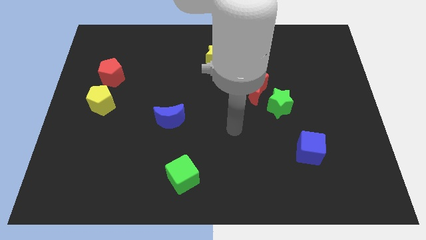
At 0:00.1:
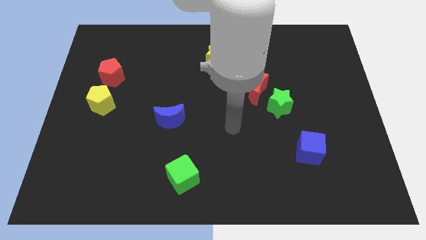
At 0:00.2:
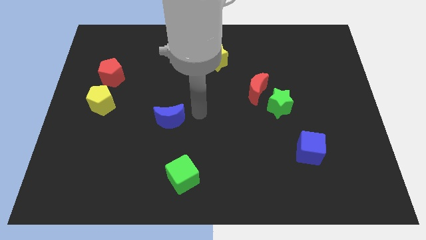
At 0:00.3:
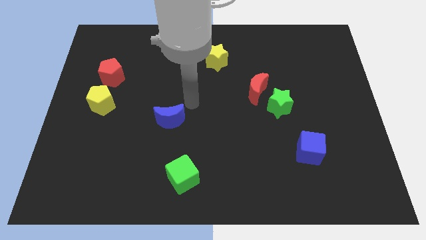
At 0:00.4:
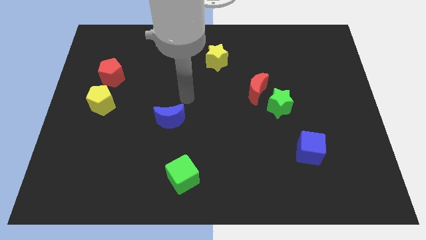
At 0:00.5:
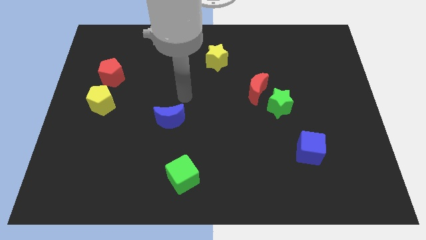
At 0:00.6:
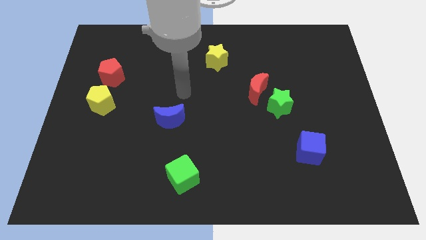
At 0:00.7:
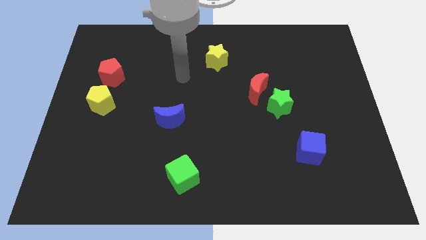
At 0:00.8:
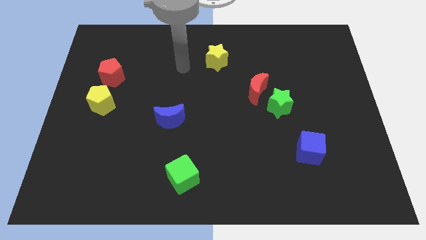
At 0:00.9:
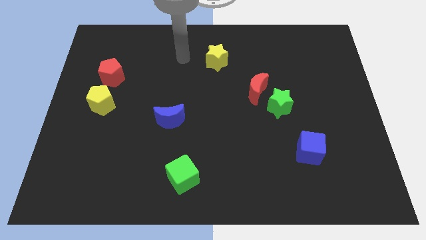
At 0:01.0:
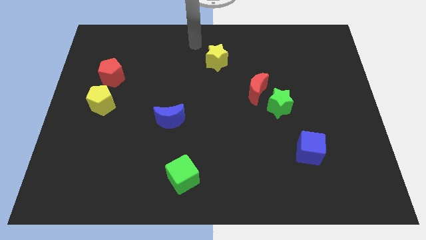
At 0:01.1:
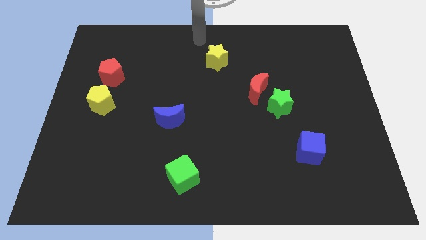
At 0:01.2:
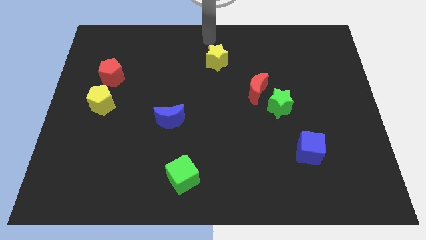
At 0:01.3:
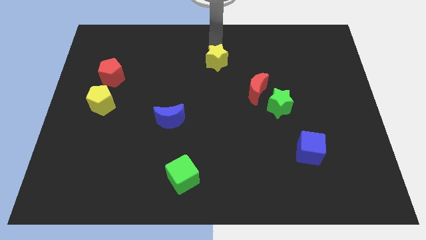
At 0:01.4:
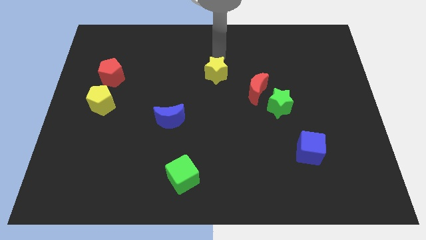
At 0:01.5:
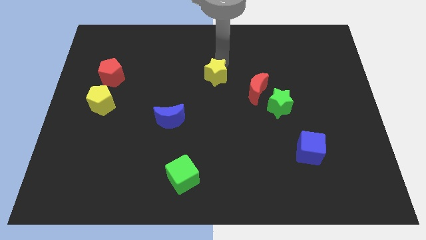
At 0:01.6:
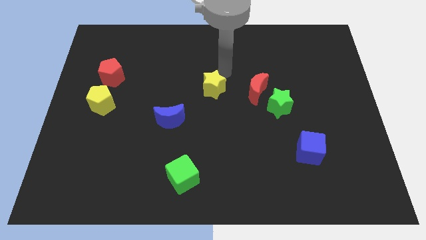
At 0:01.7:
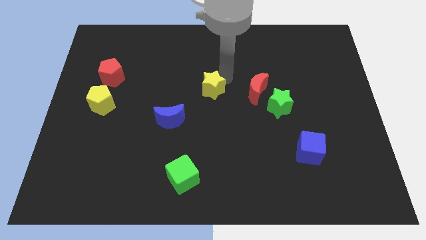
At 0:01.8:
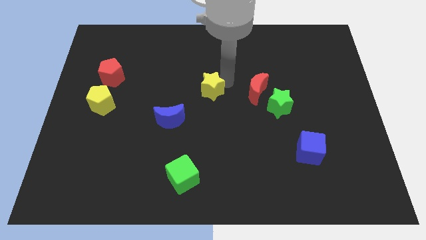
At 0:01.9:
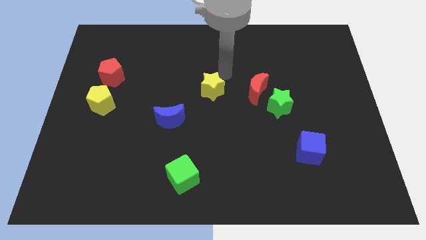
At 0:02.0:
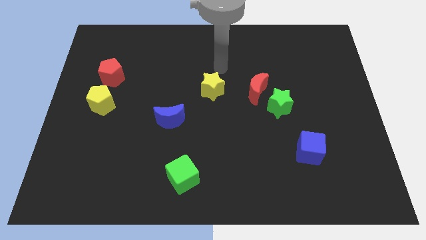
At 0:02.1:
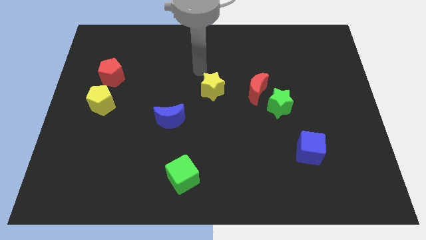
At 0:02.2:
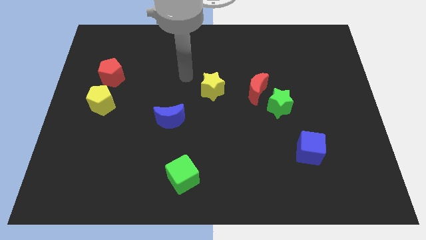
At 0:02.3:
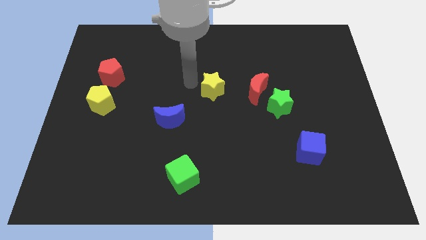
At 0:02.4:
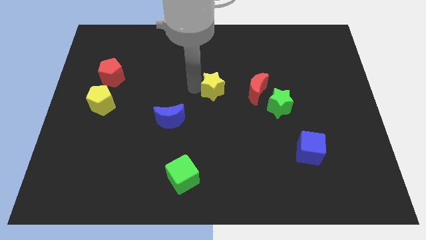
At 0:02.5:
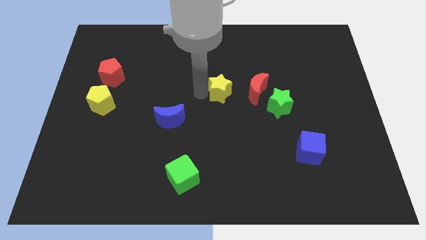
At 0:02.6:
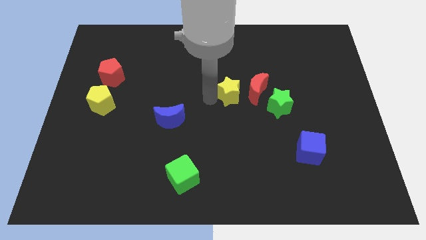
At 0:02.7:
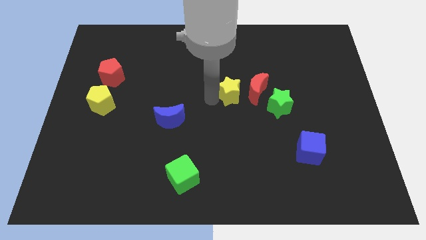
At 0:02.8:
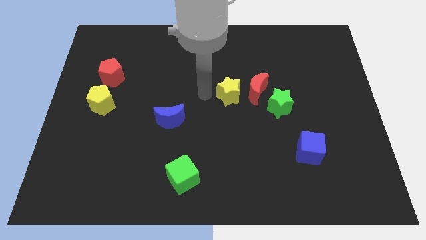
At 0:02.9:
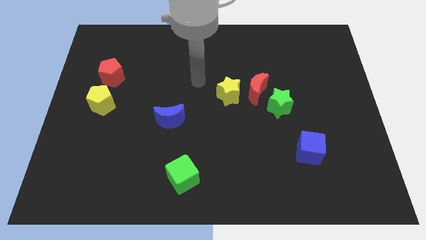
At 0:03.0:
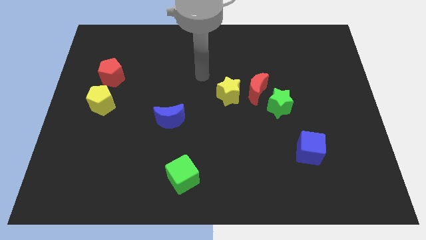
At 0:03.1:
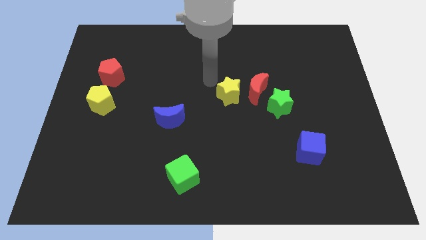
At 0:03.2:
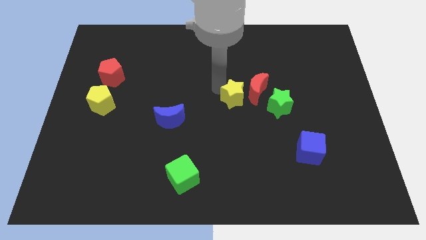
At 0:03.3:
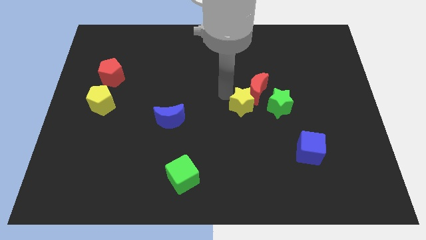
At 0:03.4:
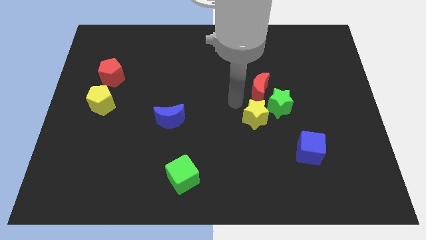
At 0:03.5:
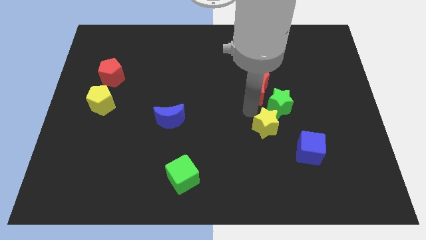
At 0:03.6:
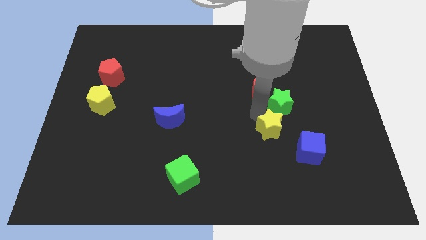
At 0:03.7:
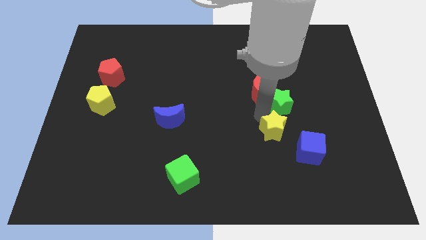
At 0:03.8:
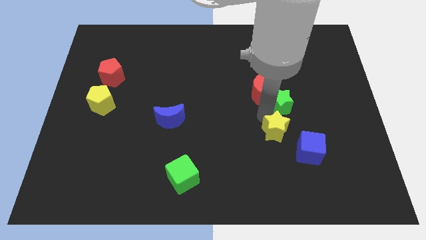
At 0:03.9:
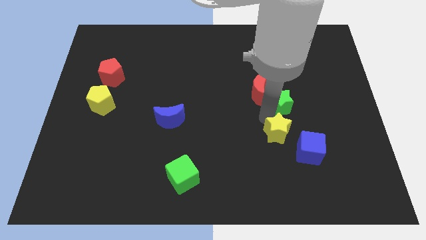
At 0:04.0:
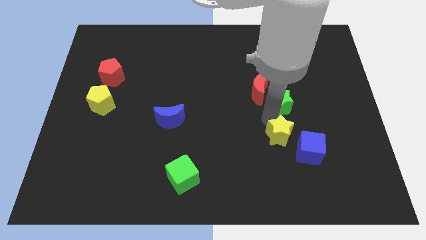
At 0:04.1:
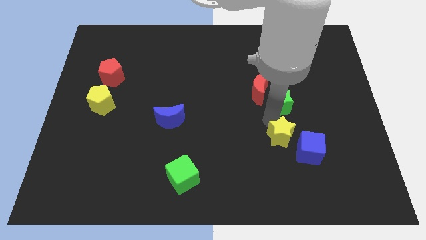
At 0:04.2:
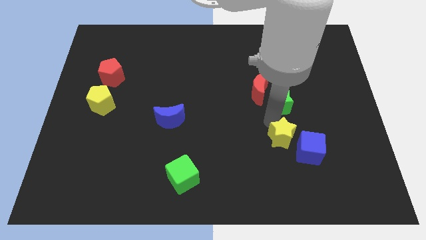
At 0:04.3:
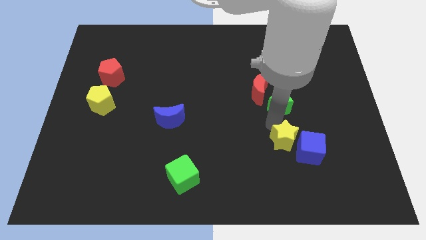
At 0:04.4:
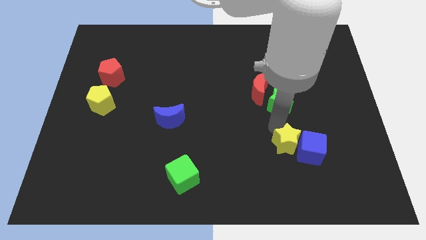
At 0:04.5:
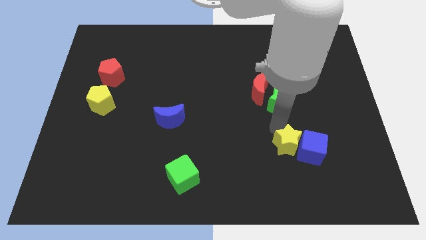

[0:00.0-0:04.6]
push the yellow star close to the blue cube

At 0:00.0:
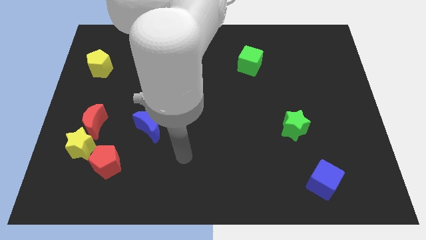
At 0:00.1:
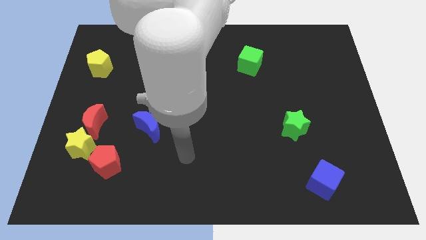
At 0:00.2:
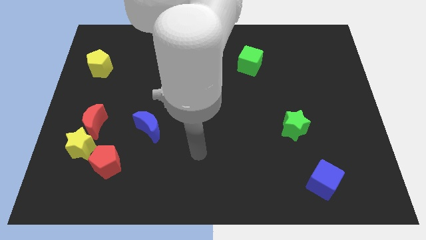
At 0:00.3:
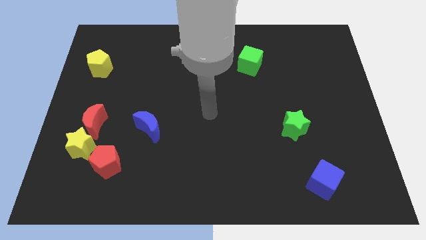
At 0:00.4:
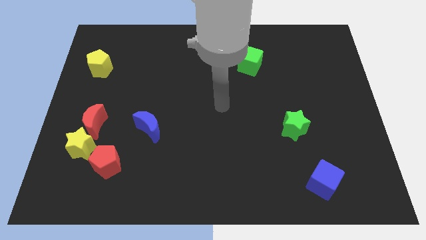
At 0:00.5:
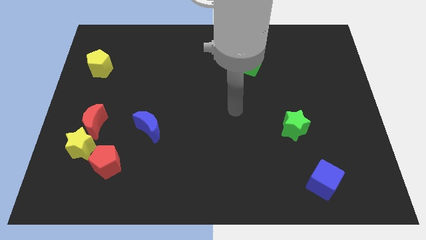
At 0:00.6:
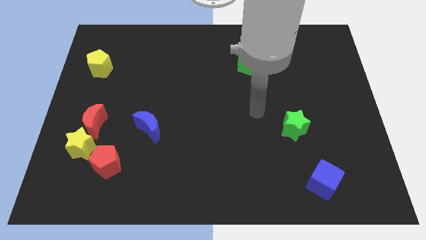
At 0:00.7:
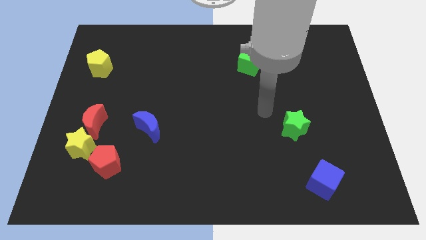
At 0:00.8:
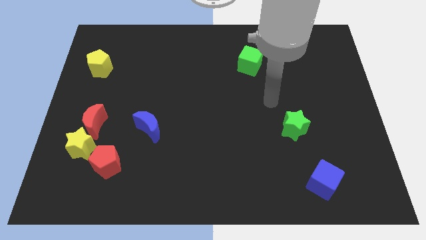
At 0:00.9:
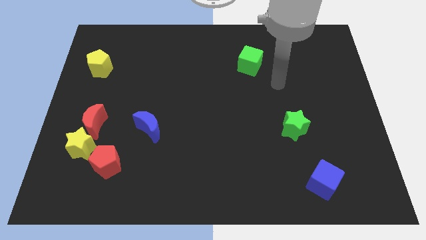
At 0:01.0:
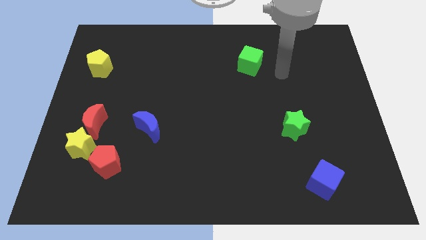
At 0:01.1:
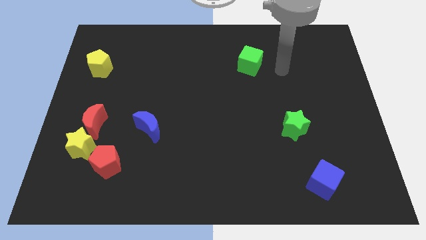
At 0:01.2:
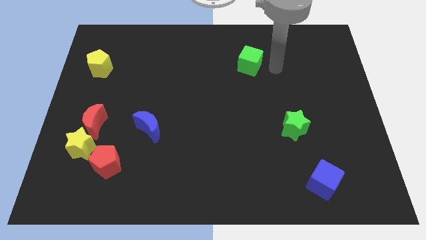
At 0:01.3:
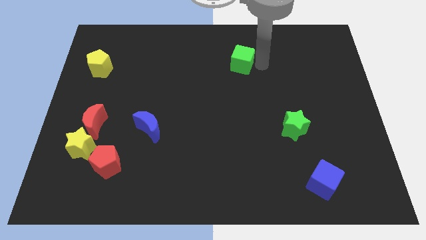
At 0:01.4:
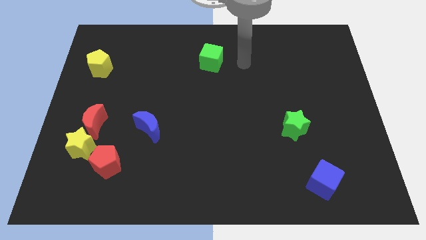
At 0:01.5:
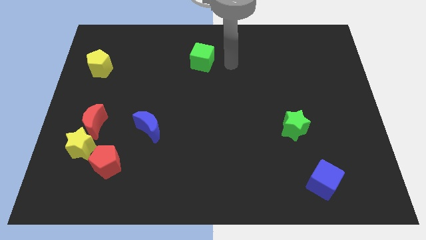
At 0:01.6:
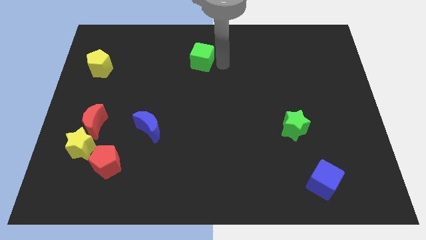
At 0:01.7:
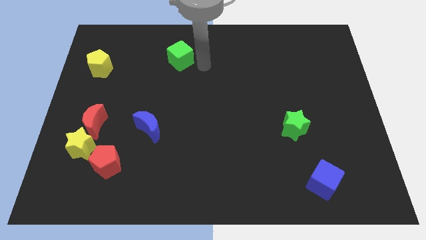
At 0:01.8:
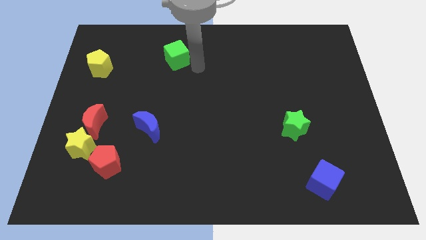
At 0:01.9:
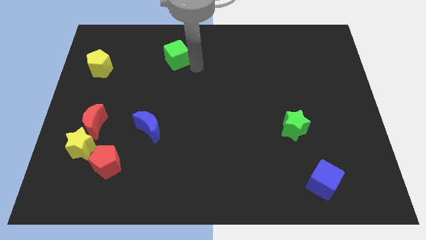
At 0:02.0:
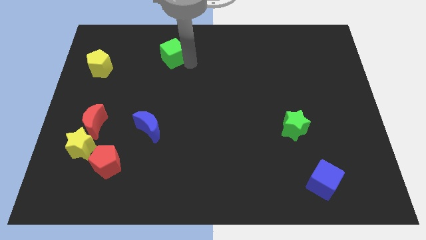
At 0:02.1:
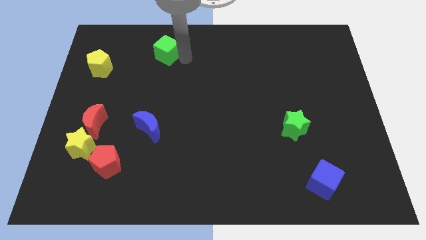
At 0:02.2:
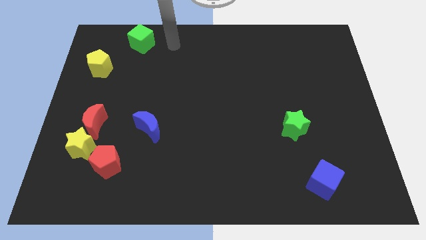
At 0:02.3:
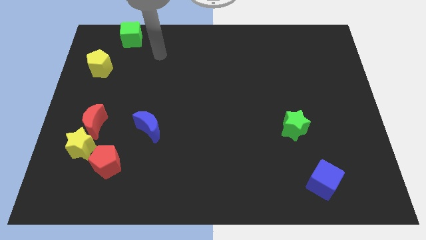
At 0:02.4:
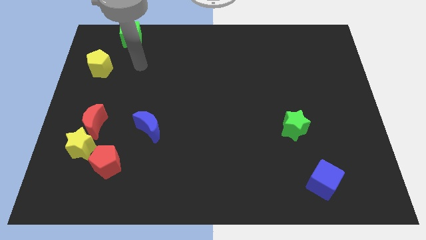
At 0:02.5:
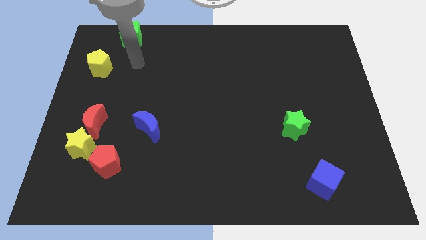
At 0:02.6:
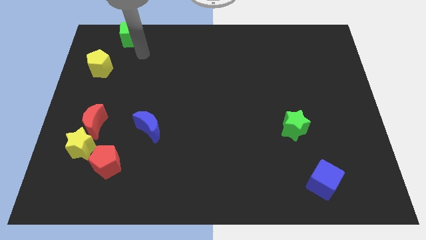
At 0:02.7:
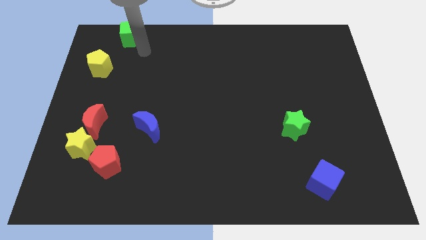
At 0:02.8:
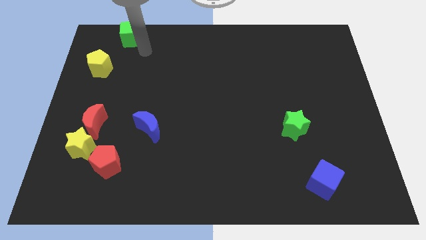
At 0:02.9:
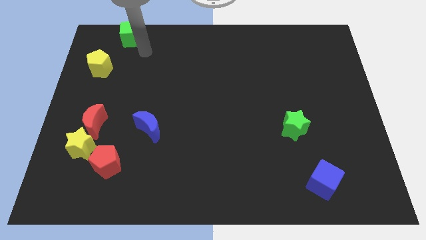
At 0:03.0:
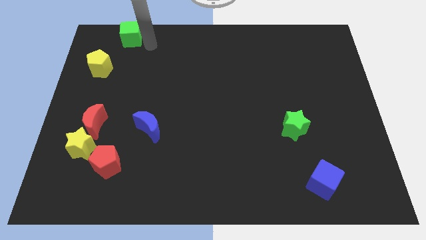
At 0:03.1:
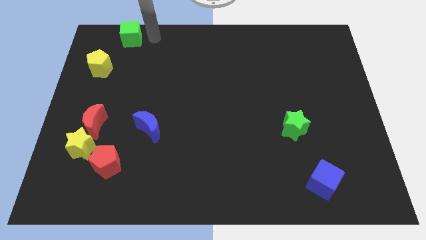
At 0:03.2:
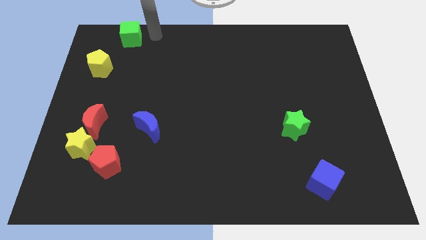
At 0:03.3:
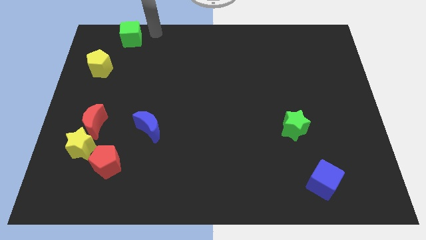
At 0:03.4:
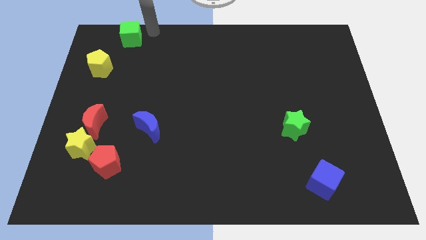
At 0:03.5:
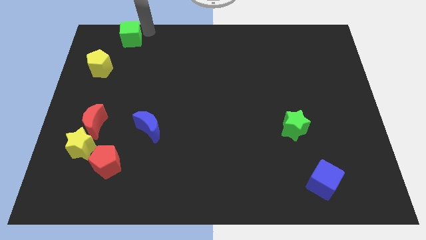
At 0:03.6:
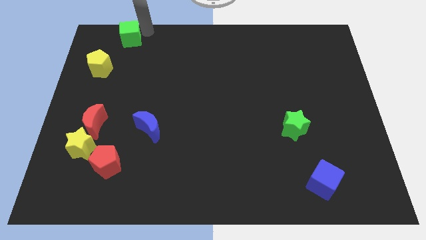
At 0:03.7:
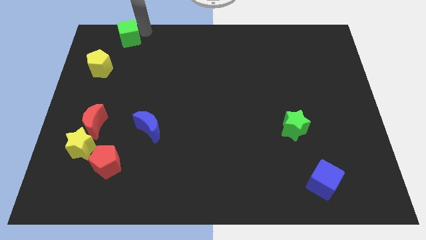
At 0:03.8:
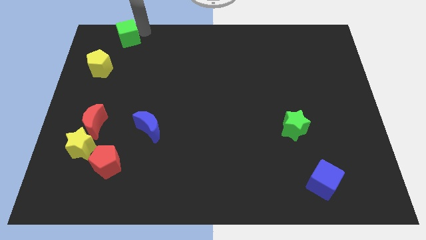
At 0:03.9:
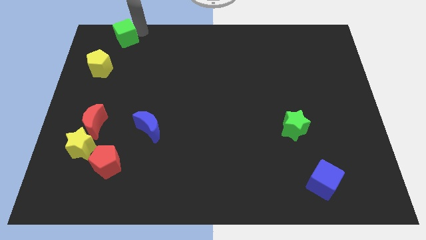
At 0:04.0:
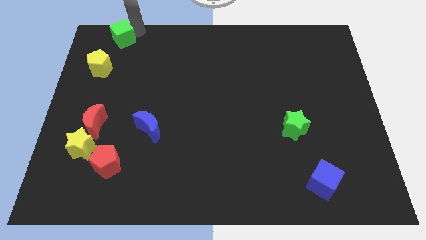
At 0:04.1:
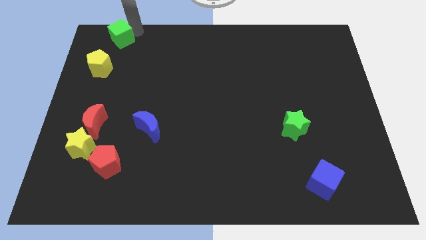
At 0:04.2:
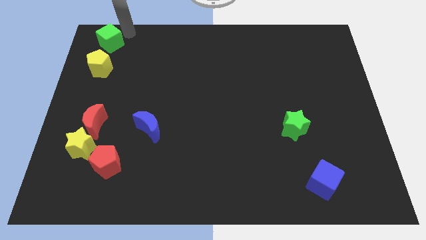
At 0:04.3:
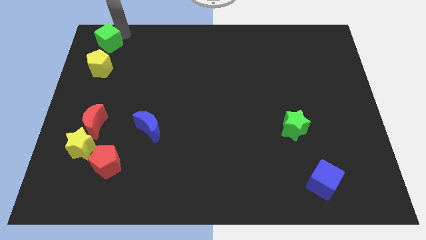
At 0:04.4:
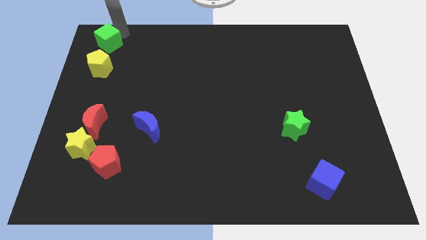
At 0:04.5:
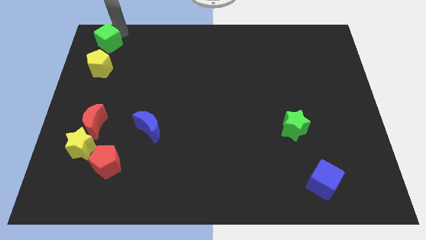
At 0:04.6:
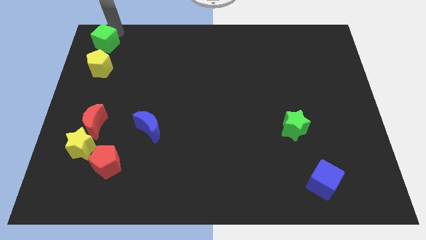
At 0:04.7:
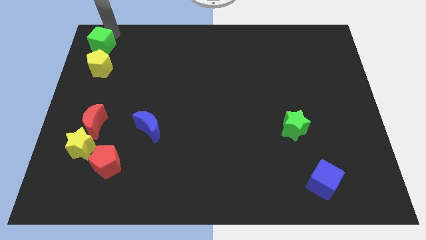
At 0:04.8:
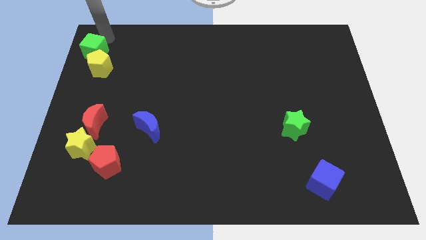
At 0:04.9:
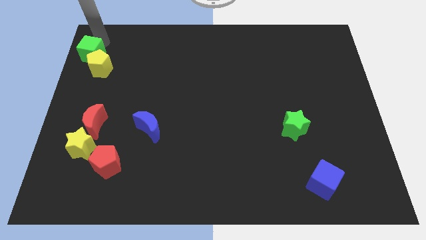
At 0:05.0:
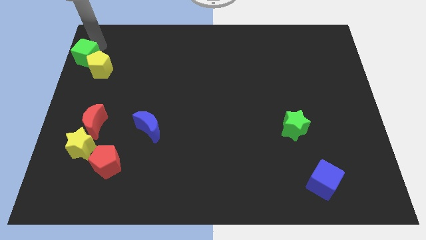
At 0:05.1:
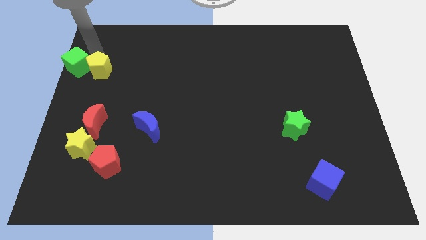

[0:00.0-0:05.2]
move the green cube close to the yellow pentagon
